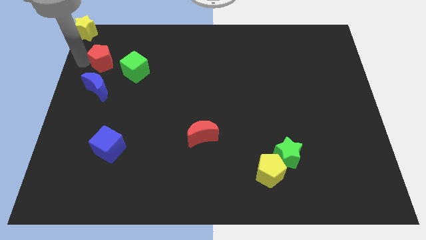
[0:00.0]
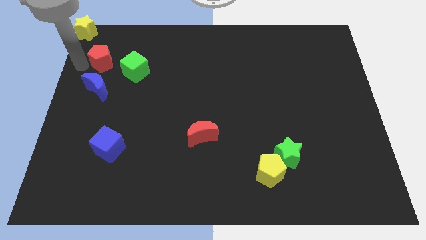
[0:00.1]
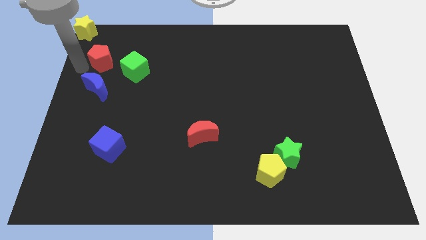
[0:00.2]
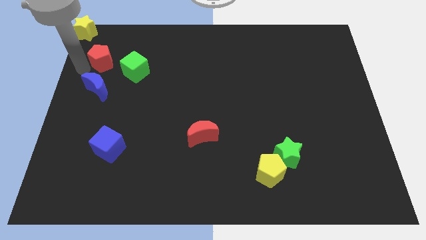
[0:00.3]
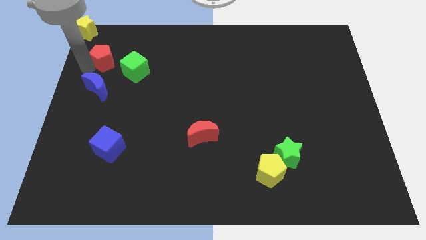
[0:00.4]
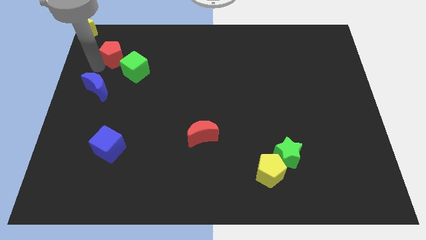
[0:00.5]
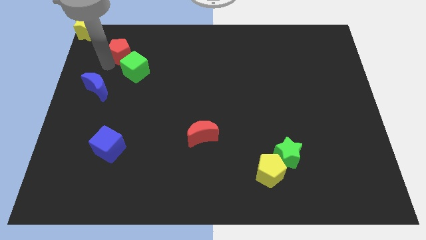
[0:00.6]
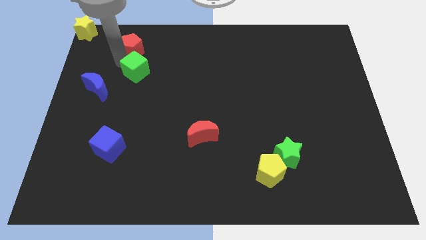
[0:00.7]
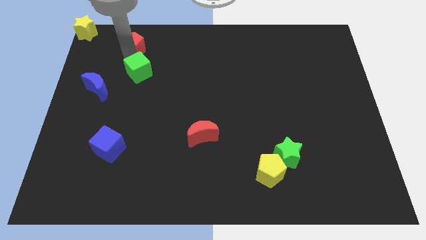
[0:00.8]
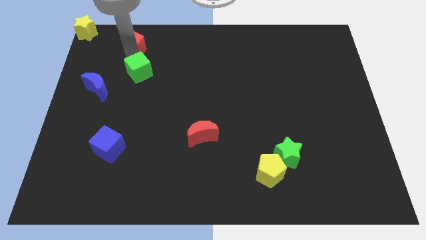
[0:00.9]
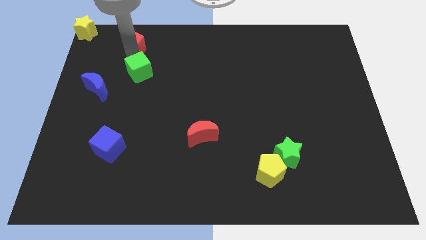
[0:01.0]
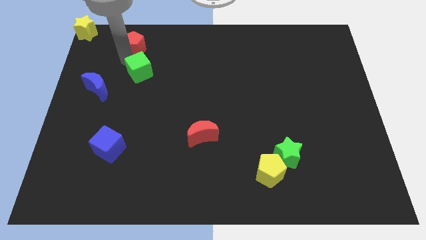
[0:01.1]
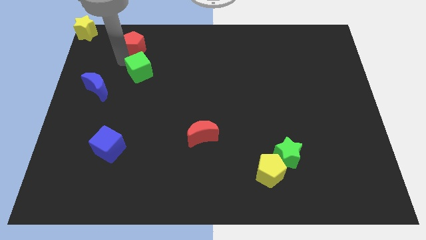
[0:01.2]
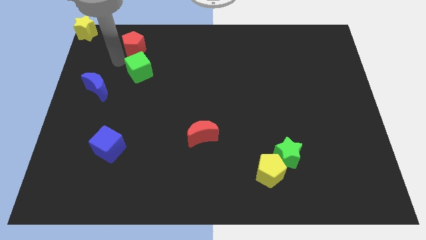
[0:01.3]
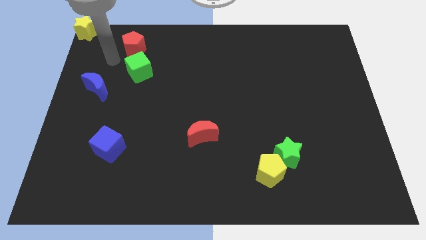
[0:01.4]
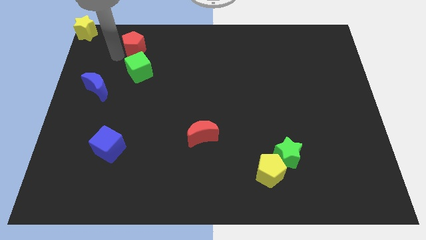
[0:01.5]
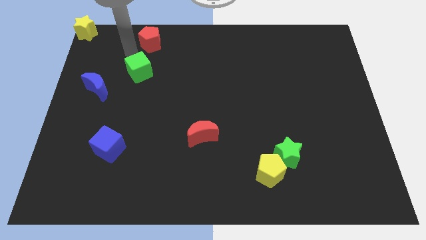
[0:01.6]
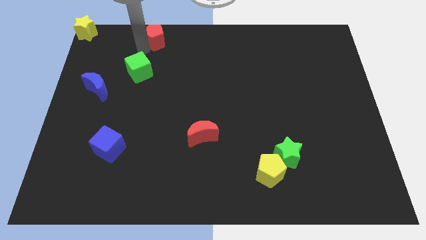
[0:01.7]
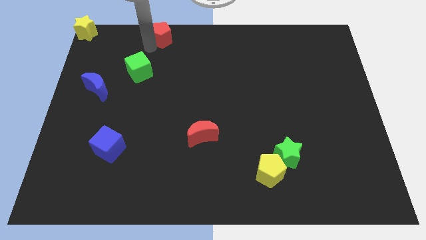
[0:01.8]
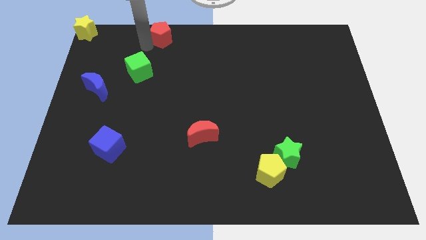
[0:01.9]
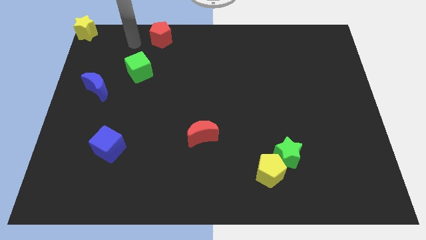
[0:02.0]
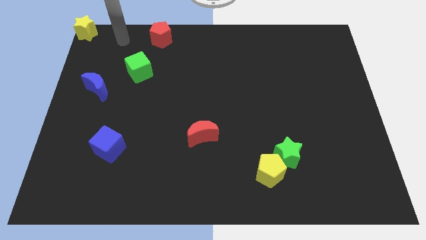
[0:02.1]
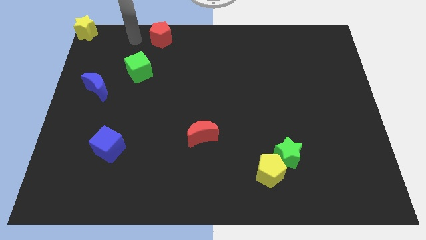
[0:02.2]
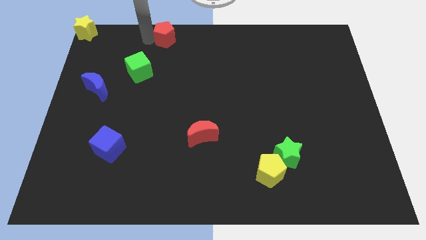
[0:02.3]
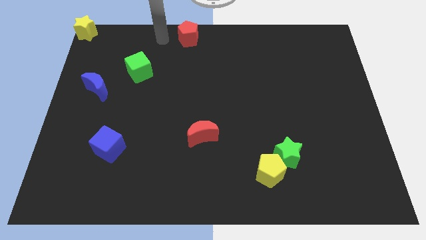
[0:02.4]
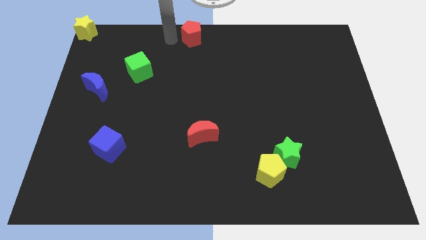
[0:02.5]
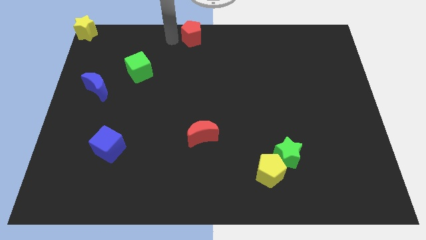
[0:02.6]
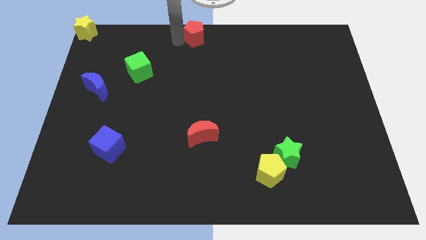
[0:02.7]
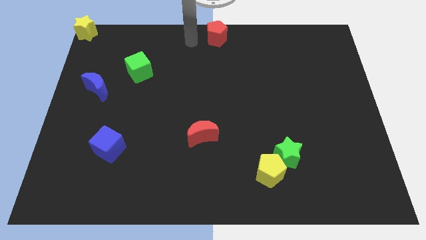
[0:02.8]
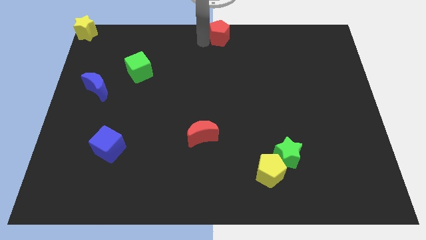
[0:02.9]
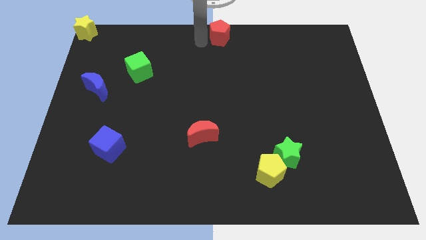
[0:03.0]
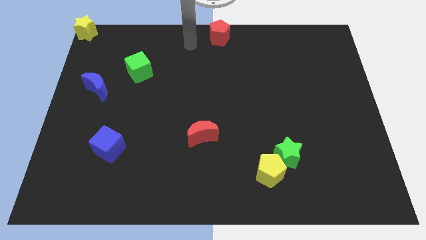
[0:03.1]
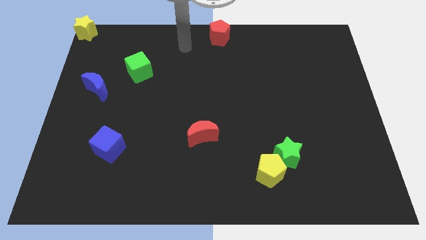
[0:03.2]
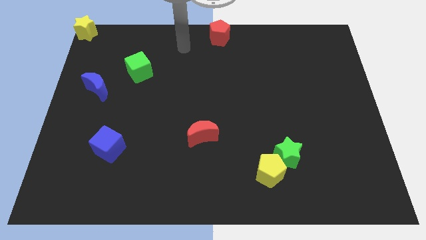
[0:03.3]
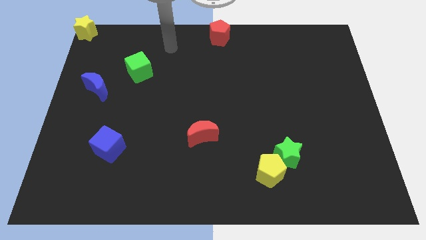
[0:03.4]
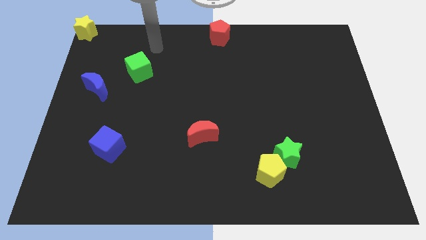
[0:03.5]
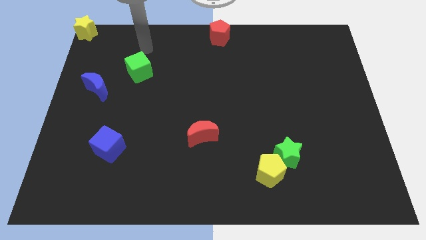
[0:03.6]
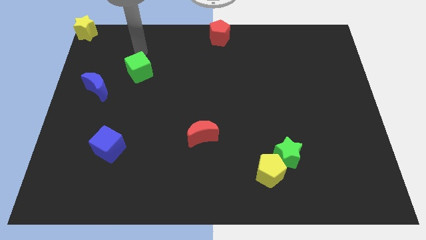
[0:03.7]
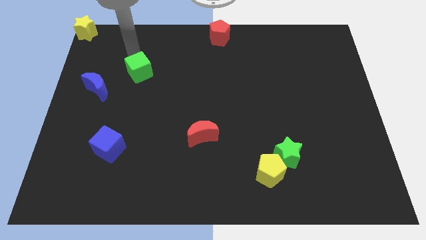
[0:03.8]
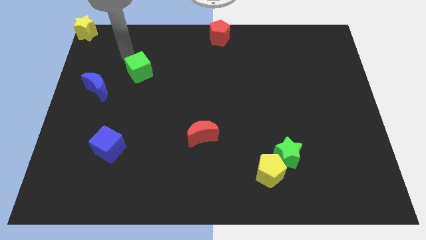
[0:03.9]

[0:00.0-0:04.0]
place the red pentagon at the top center of the board

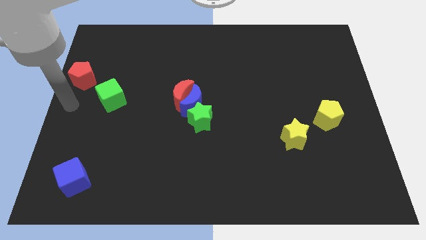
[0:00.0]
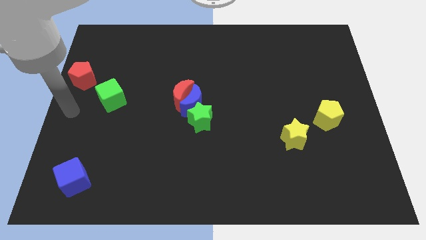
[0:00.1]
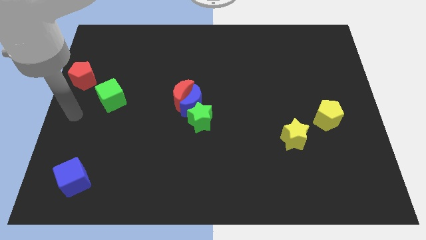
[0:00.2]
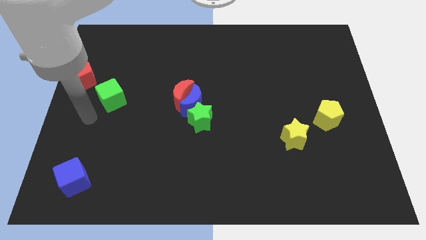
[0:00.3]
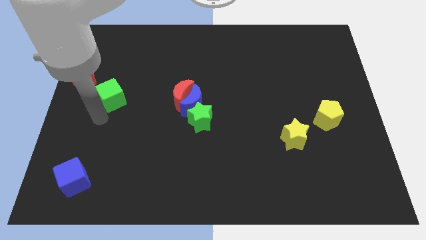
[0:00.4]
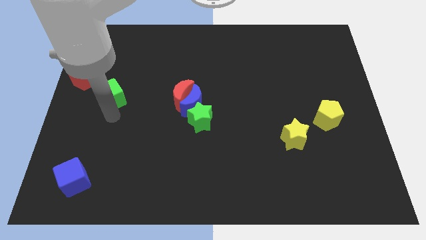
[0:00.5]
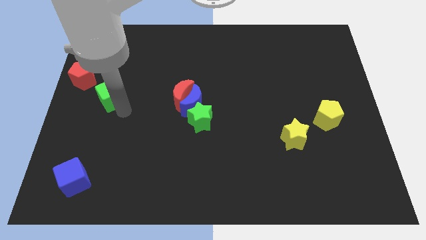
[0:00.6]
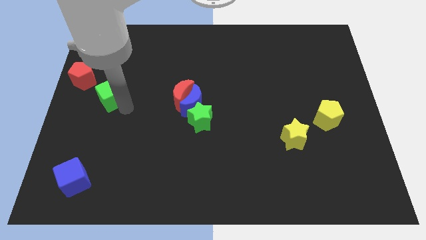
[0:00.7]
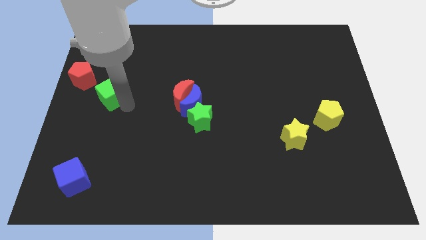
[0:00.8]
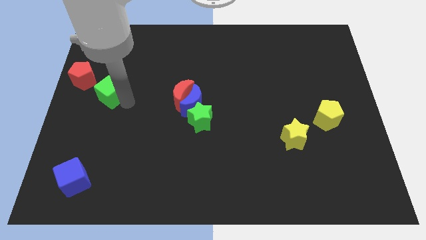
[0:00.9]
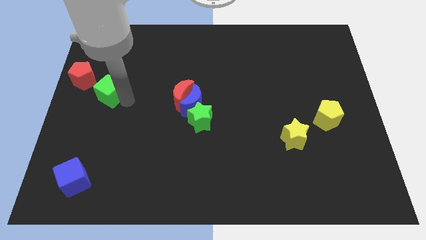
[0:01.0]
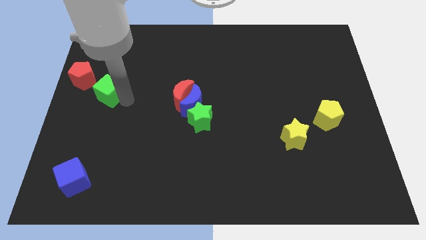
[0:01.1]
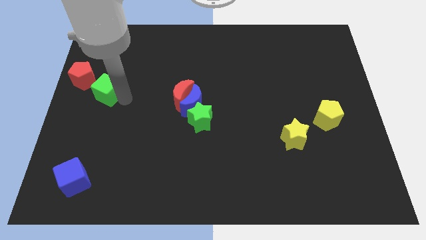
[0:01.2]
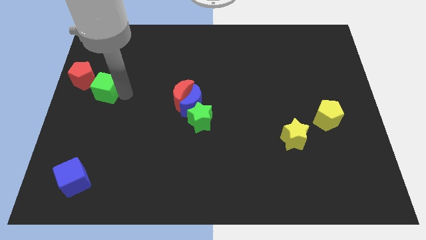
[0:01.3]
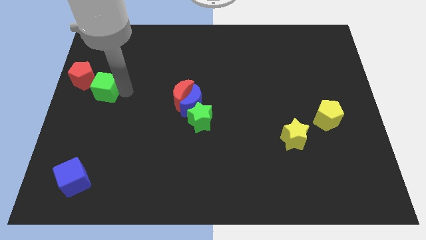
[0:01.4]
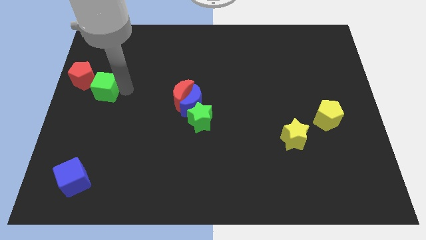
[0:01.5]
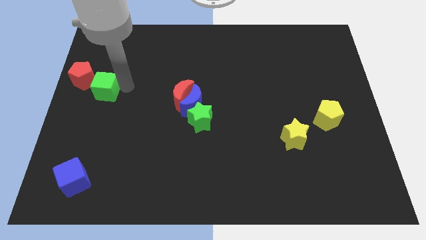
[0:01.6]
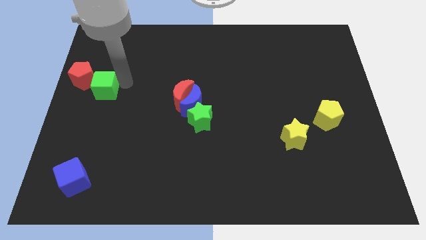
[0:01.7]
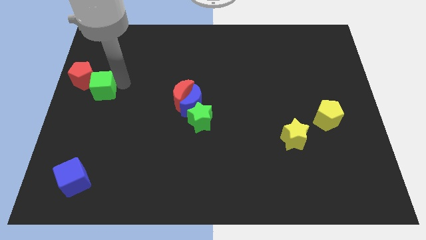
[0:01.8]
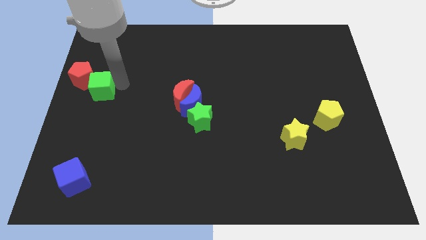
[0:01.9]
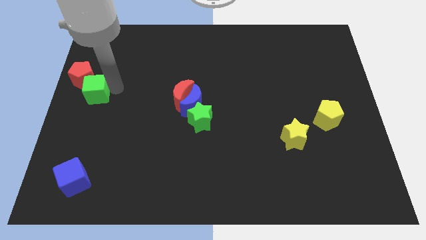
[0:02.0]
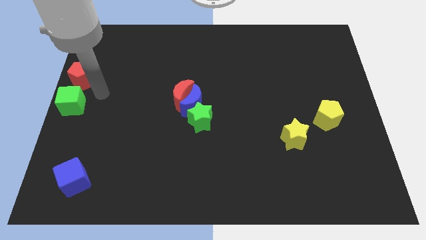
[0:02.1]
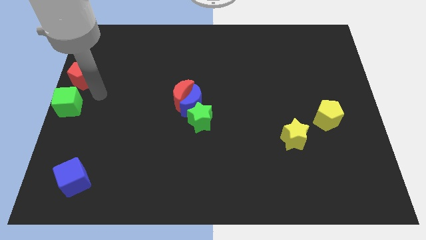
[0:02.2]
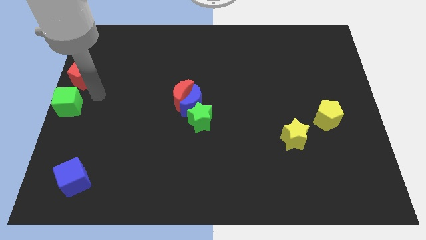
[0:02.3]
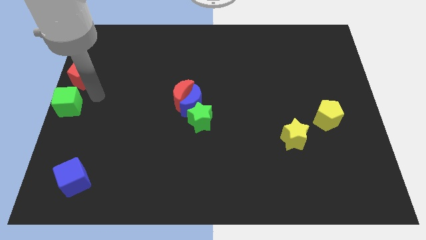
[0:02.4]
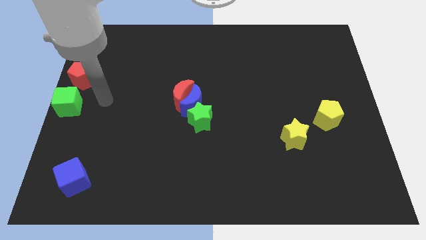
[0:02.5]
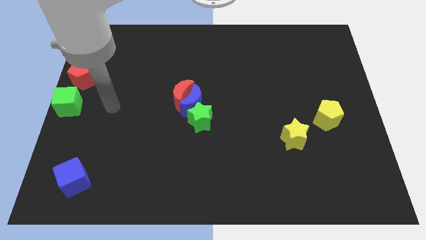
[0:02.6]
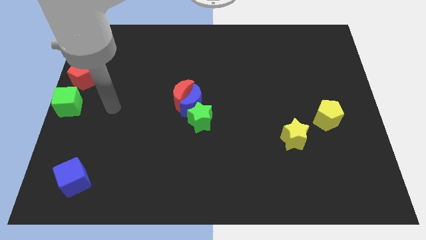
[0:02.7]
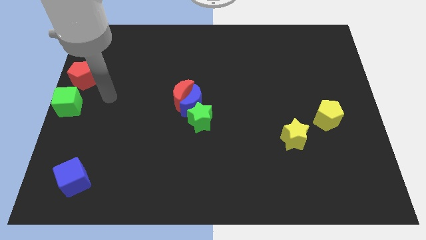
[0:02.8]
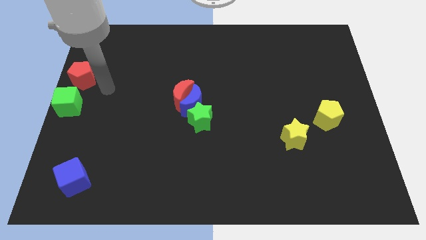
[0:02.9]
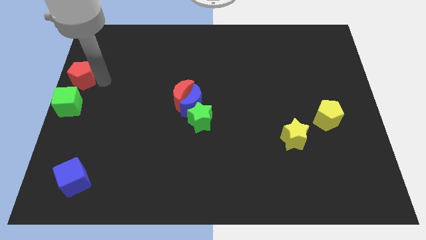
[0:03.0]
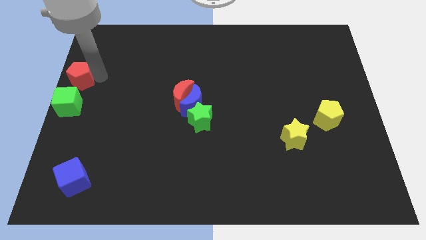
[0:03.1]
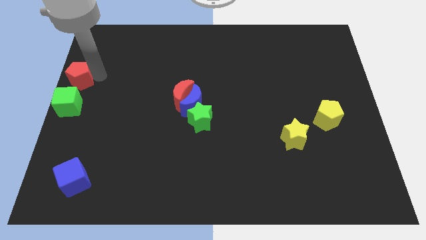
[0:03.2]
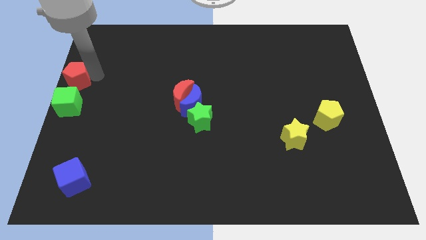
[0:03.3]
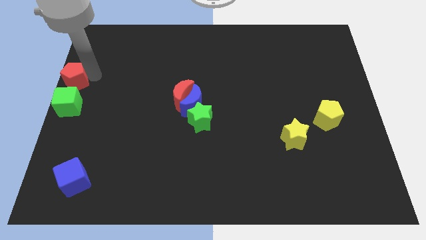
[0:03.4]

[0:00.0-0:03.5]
place the green cube below the red pentagon

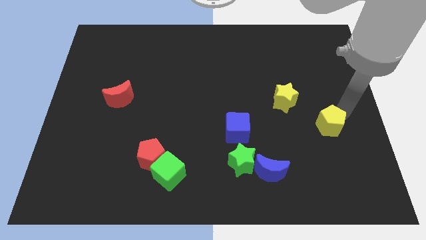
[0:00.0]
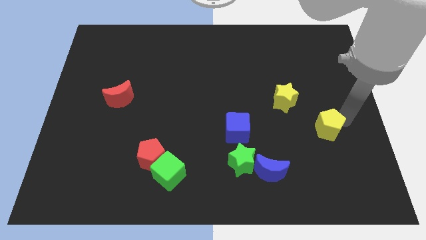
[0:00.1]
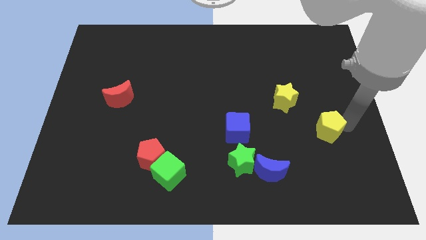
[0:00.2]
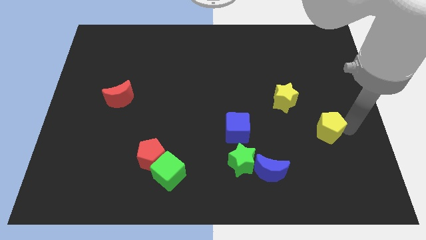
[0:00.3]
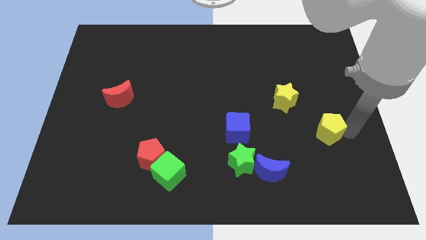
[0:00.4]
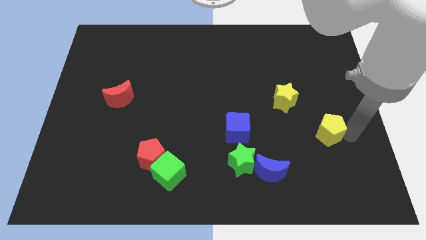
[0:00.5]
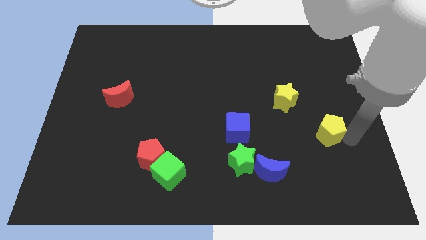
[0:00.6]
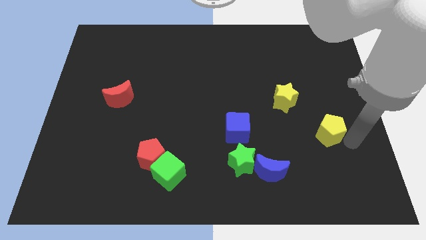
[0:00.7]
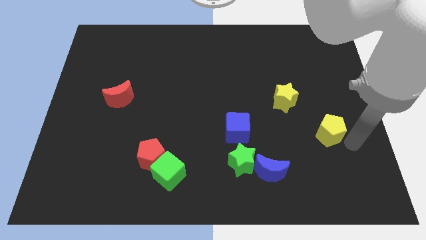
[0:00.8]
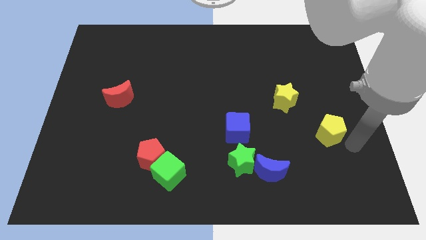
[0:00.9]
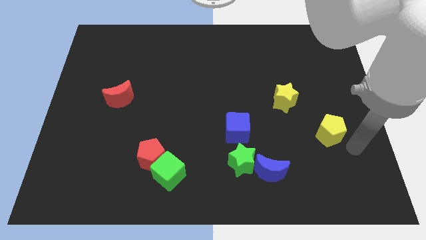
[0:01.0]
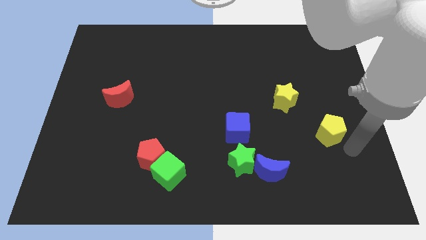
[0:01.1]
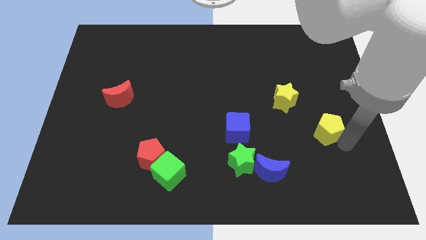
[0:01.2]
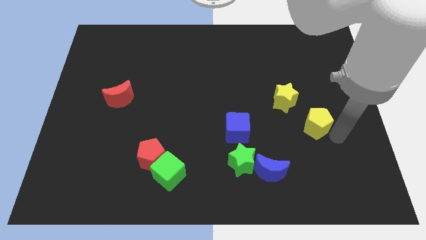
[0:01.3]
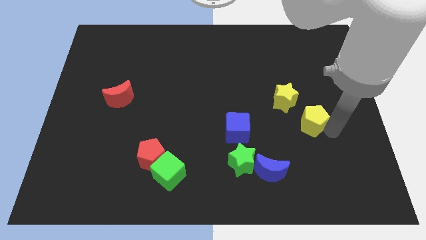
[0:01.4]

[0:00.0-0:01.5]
move yellow pentagon slightly up

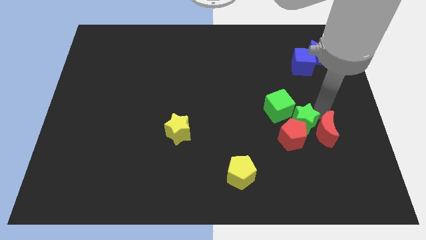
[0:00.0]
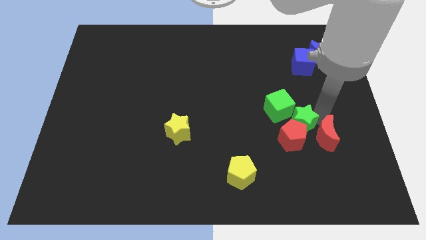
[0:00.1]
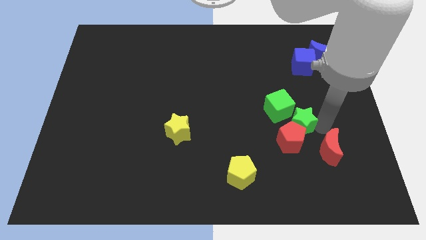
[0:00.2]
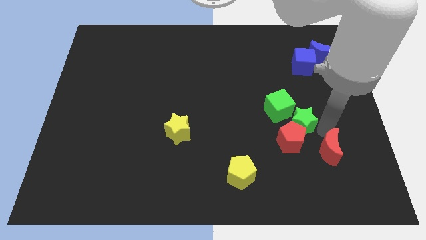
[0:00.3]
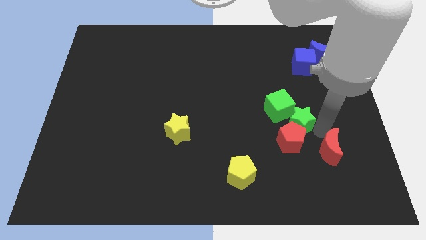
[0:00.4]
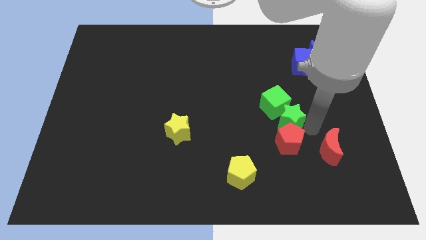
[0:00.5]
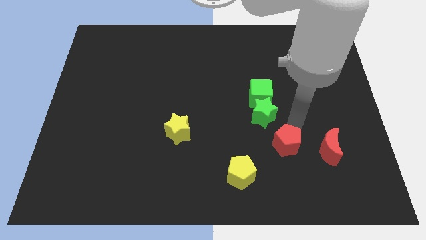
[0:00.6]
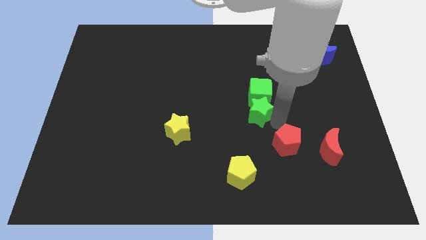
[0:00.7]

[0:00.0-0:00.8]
push green star below green cube
